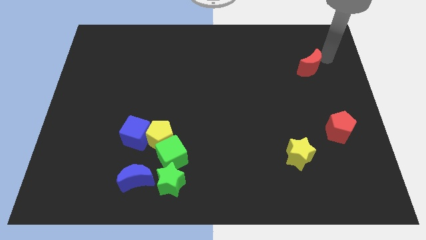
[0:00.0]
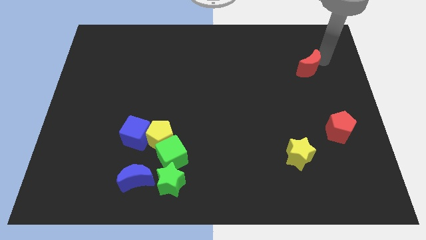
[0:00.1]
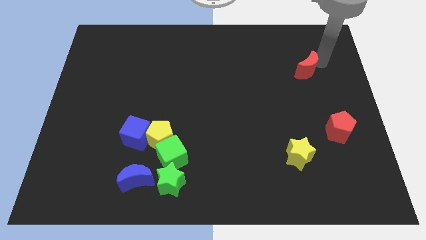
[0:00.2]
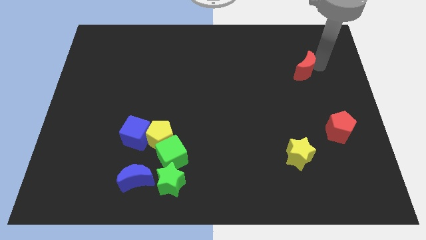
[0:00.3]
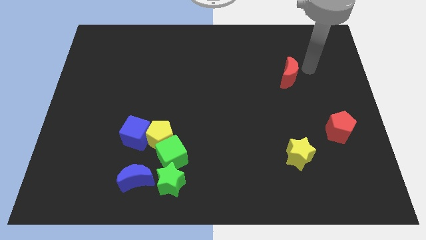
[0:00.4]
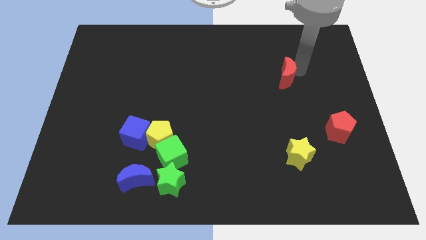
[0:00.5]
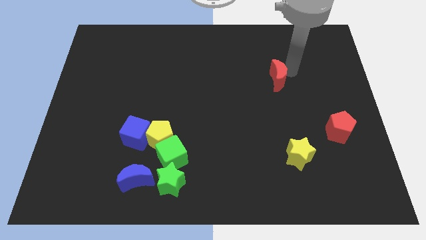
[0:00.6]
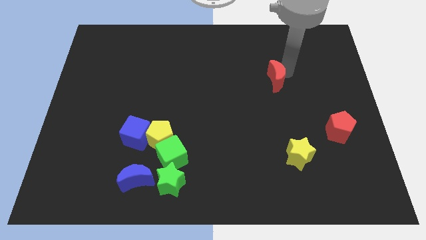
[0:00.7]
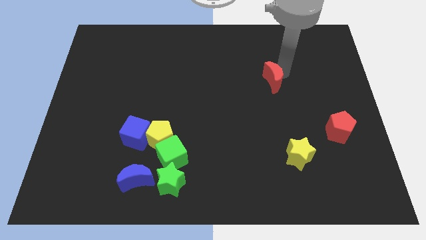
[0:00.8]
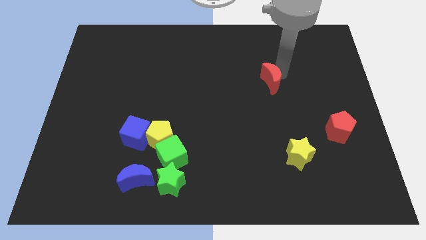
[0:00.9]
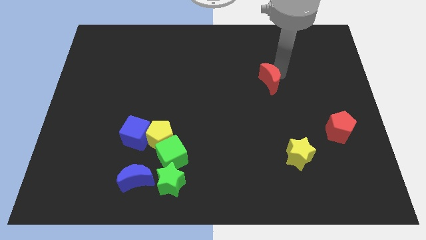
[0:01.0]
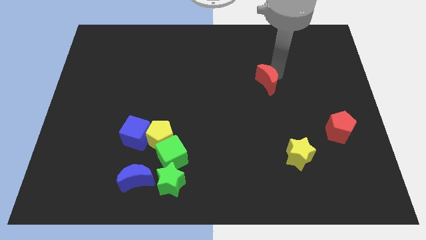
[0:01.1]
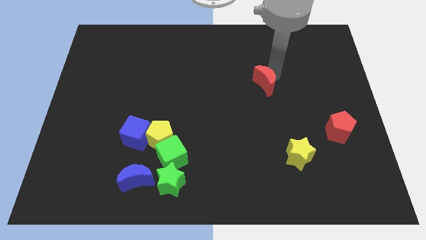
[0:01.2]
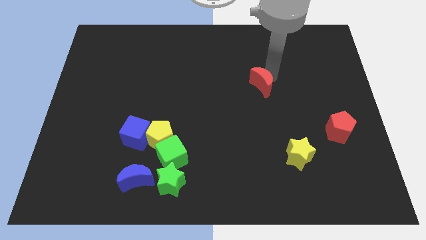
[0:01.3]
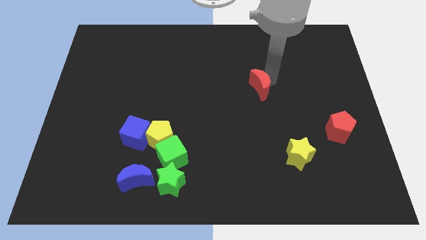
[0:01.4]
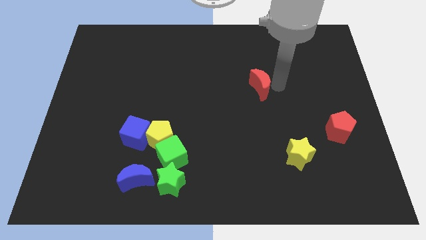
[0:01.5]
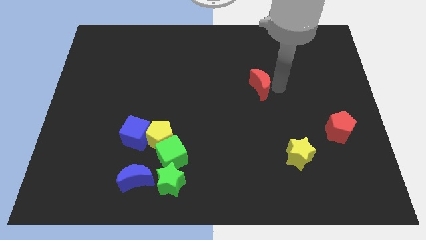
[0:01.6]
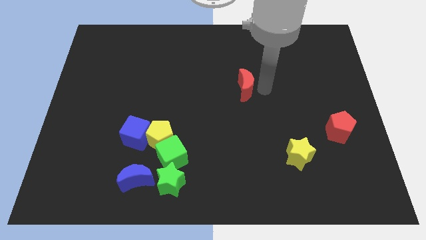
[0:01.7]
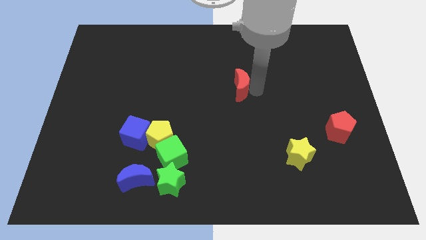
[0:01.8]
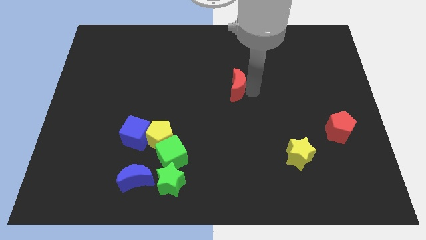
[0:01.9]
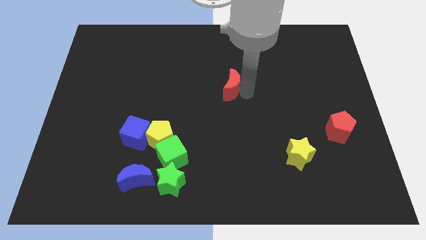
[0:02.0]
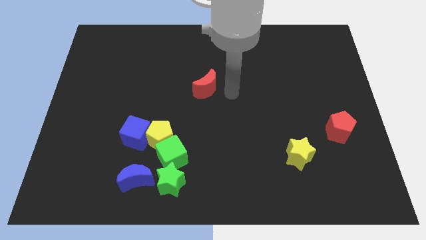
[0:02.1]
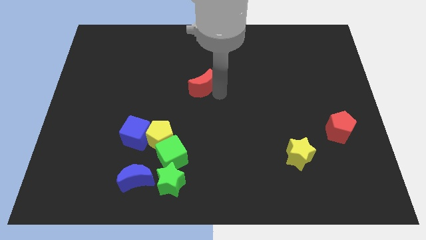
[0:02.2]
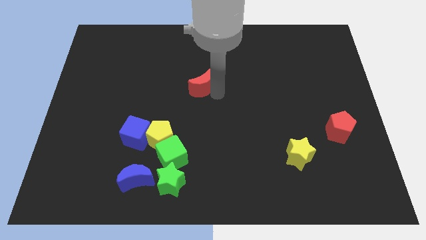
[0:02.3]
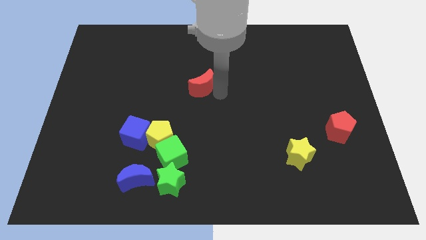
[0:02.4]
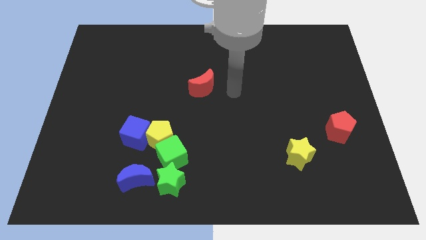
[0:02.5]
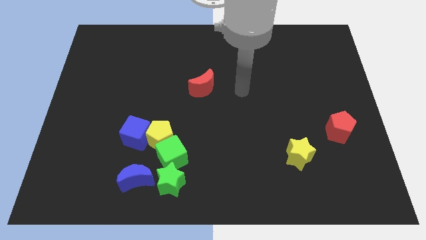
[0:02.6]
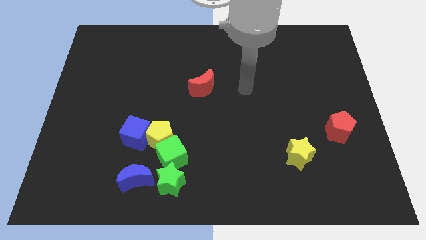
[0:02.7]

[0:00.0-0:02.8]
push the red moon to the left side of the board

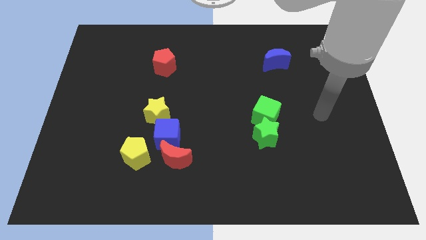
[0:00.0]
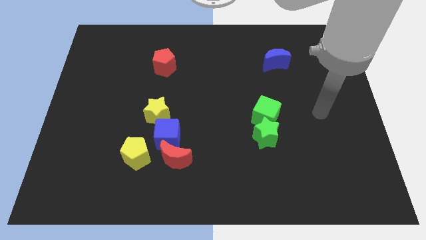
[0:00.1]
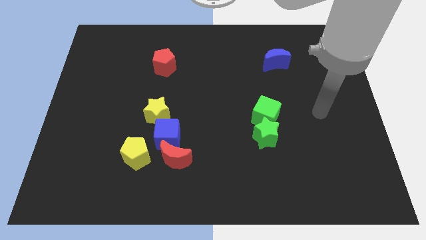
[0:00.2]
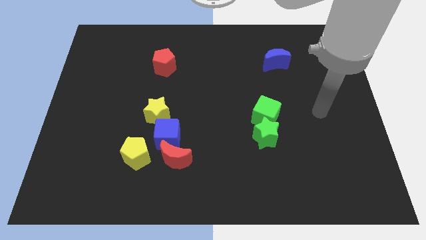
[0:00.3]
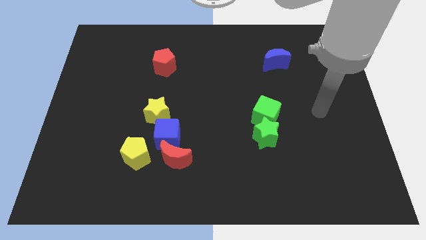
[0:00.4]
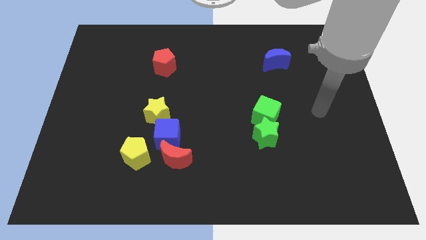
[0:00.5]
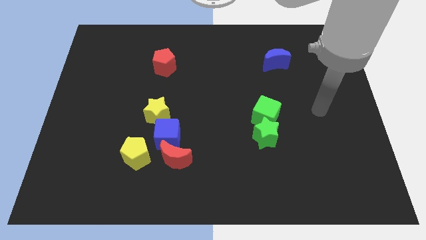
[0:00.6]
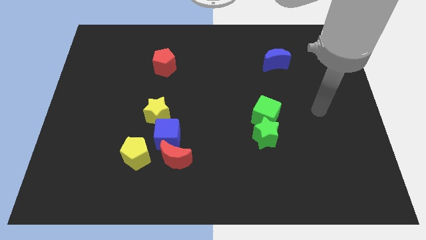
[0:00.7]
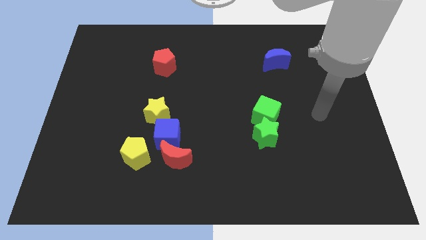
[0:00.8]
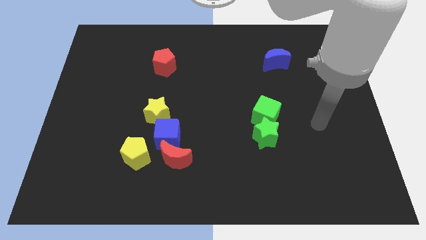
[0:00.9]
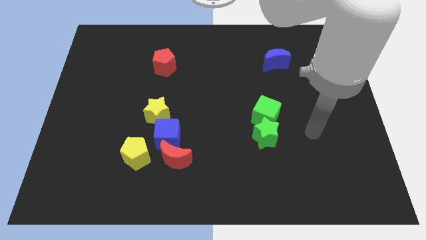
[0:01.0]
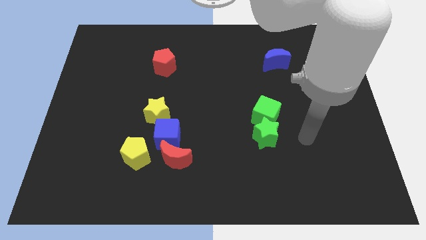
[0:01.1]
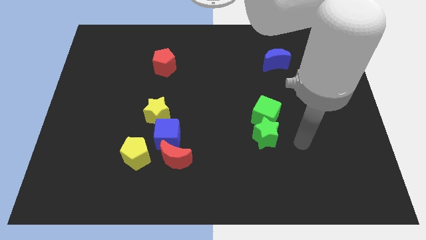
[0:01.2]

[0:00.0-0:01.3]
place arm on right side of green star

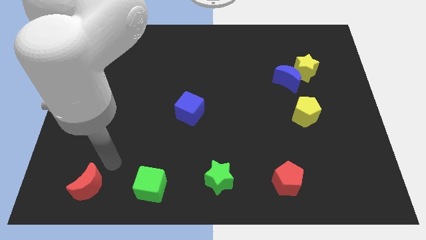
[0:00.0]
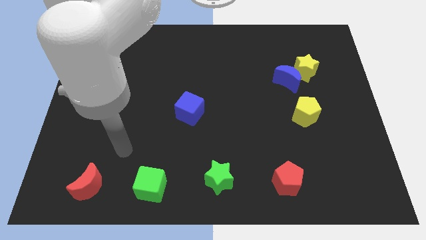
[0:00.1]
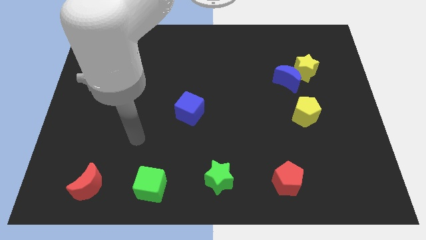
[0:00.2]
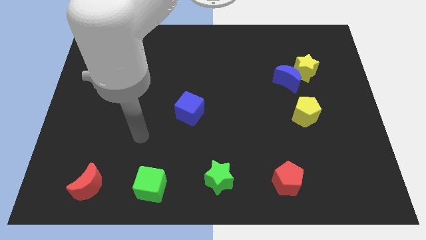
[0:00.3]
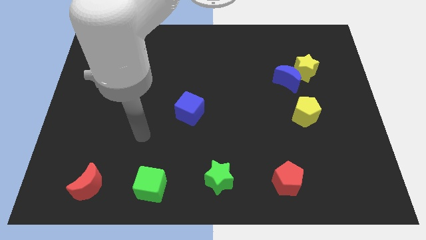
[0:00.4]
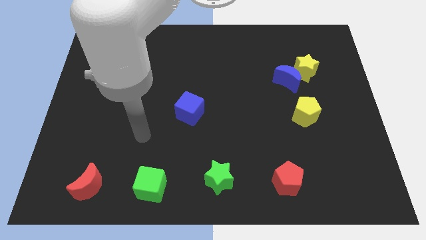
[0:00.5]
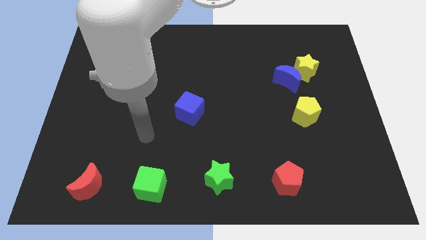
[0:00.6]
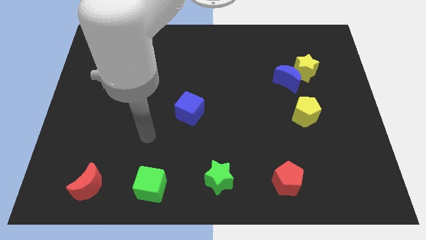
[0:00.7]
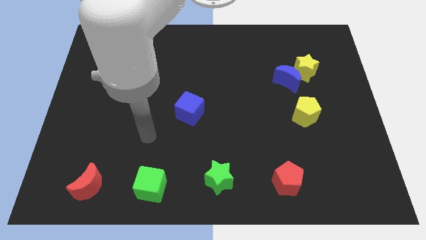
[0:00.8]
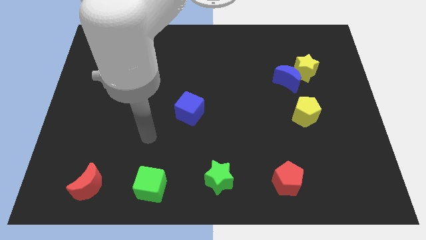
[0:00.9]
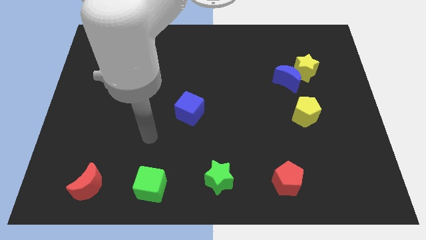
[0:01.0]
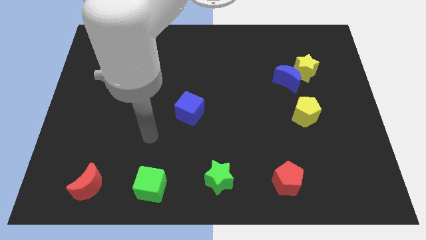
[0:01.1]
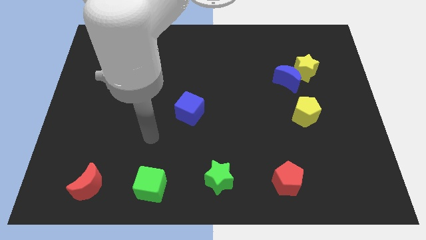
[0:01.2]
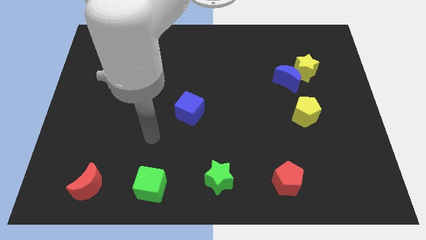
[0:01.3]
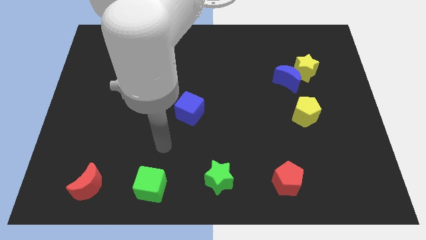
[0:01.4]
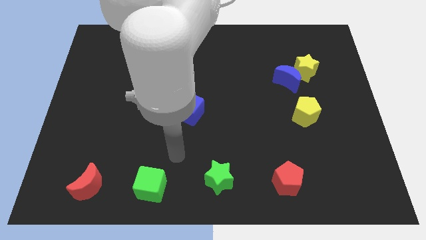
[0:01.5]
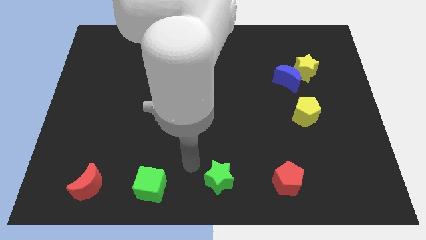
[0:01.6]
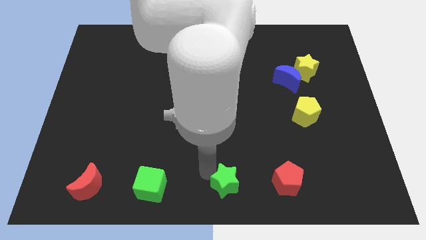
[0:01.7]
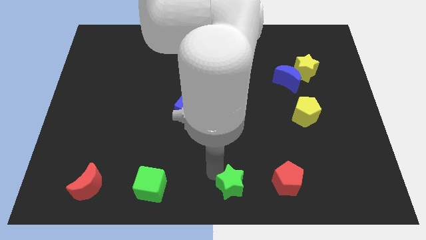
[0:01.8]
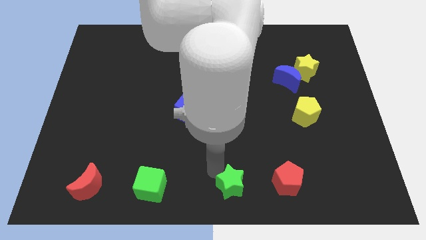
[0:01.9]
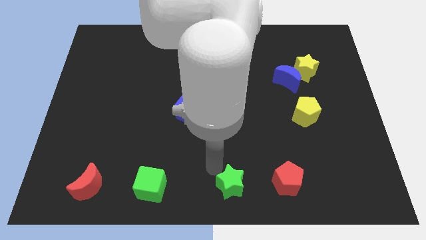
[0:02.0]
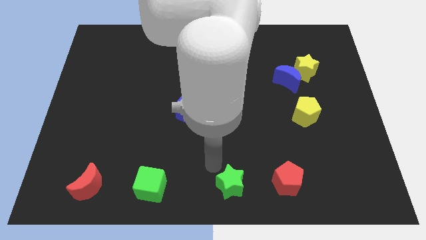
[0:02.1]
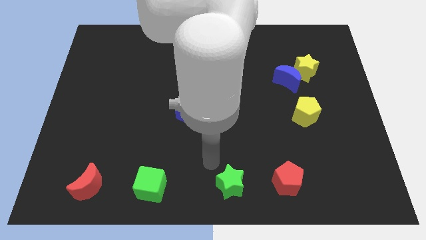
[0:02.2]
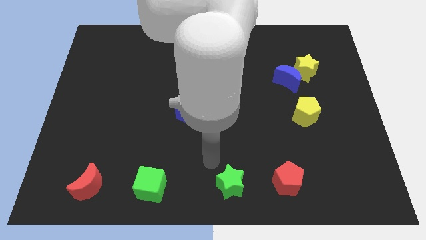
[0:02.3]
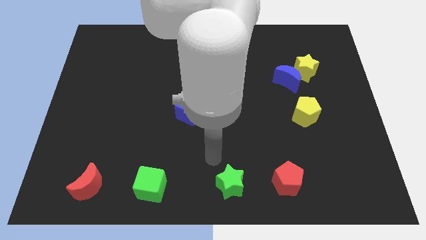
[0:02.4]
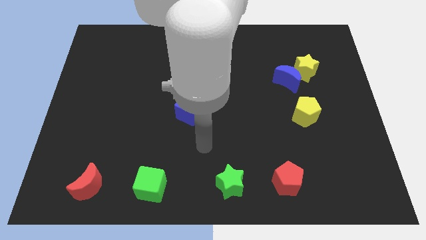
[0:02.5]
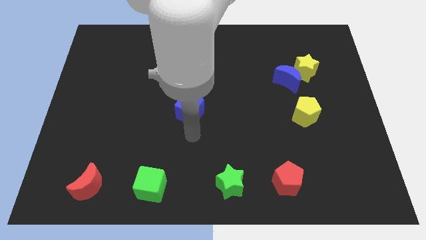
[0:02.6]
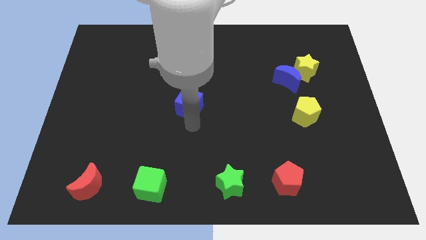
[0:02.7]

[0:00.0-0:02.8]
move thee green star close to the red pentagon

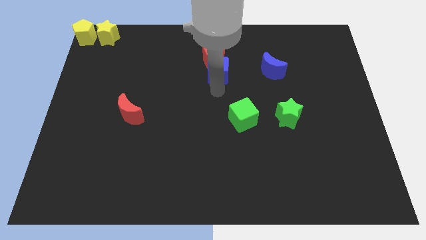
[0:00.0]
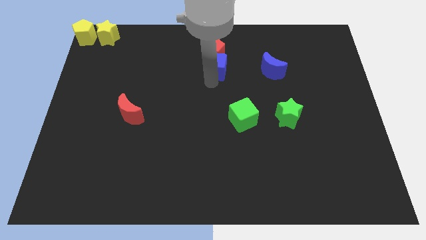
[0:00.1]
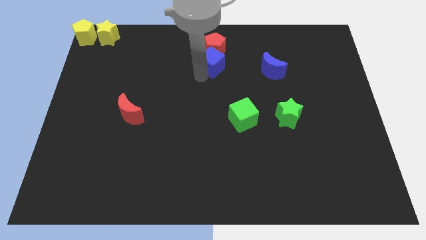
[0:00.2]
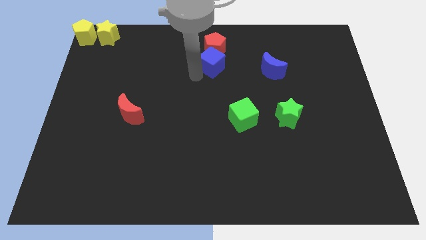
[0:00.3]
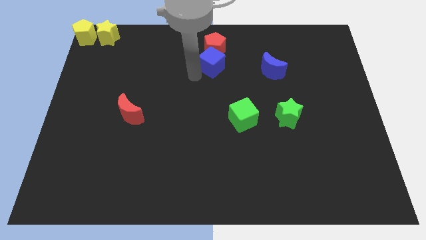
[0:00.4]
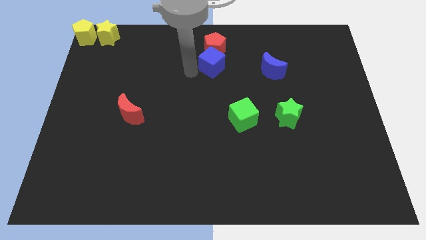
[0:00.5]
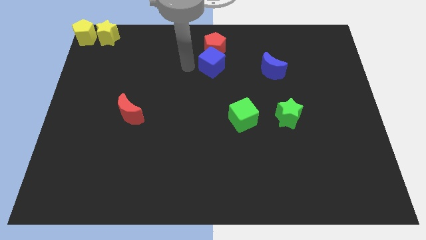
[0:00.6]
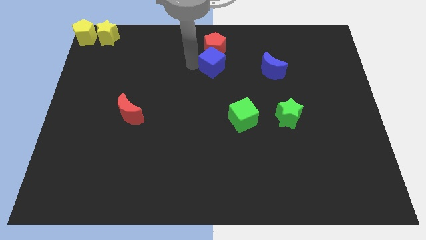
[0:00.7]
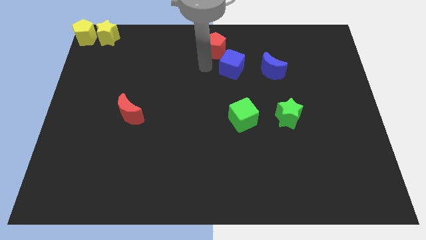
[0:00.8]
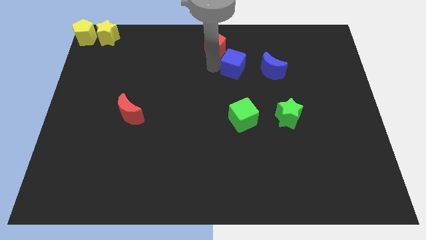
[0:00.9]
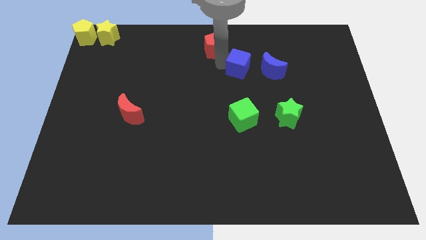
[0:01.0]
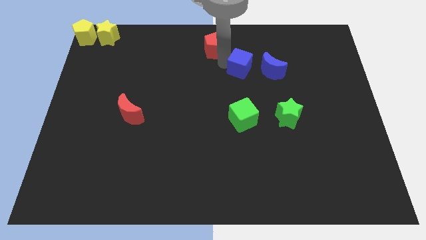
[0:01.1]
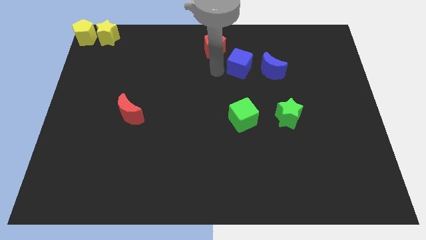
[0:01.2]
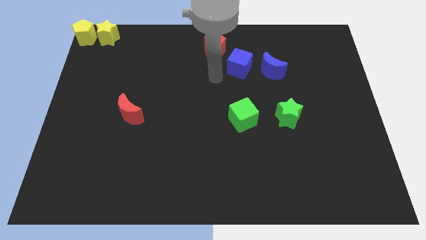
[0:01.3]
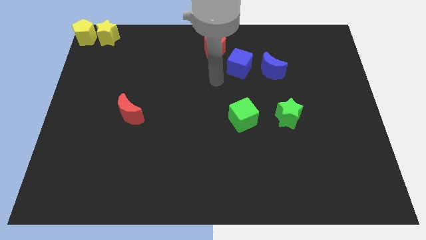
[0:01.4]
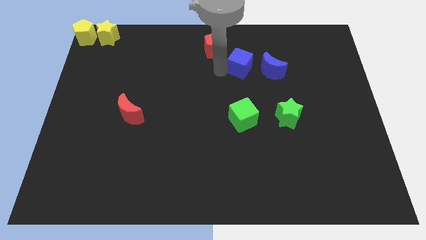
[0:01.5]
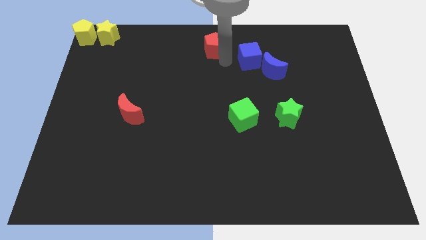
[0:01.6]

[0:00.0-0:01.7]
move blue cube in between the blue moon and red pentagon

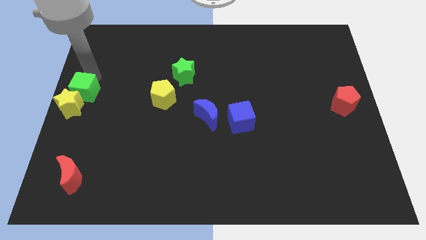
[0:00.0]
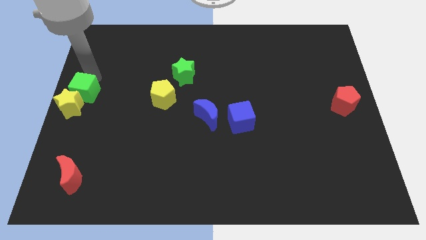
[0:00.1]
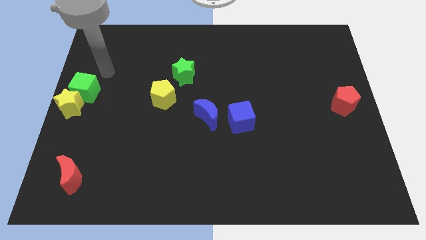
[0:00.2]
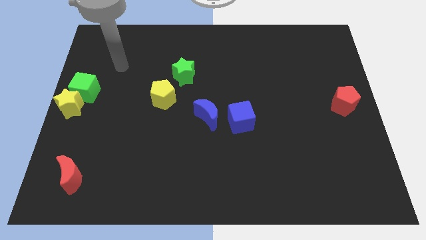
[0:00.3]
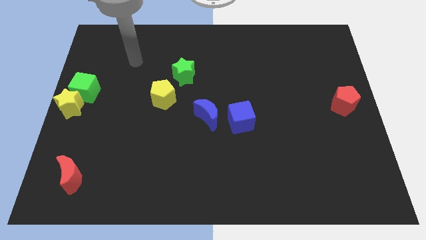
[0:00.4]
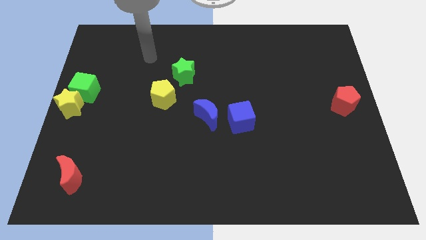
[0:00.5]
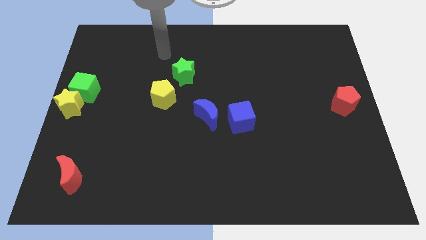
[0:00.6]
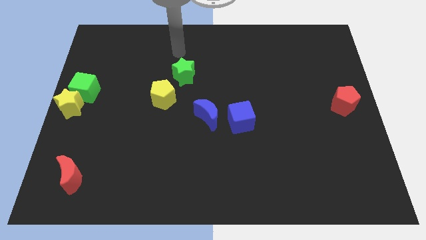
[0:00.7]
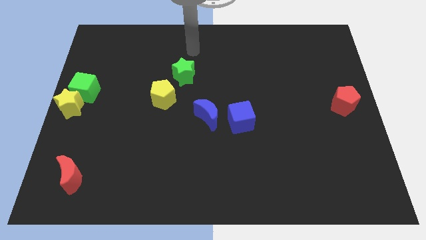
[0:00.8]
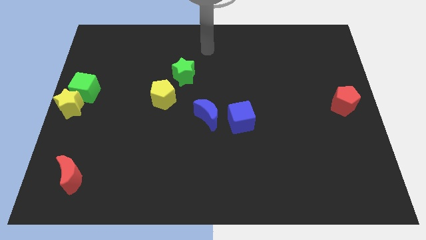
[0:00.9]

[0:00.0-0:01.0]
move arm away from green cube
